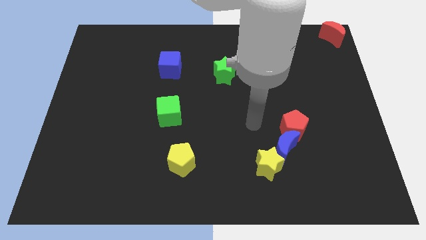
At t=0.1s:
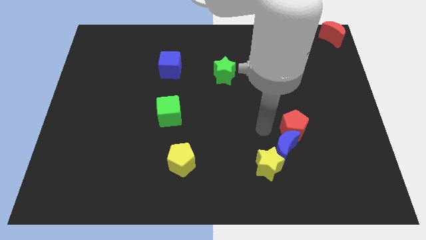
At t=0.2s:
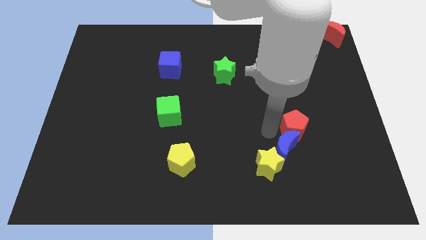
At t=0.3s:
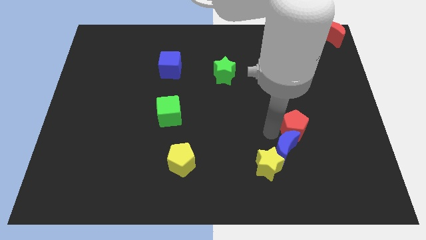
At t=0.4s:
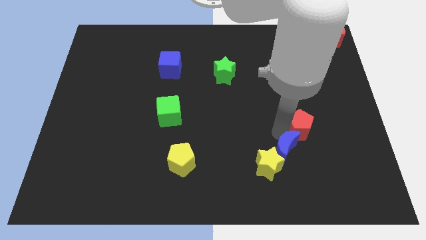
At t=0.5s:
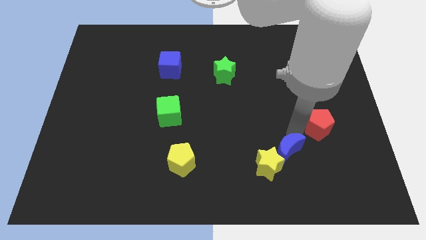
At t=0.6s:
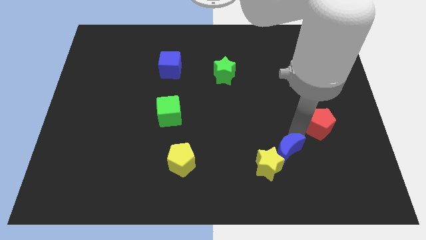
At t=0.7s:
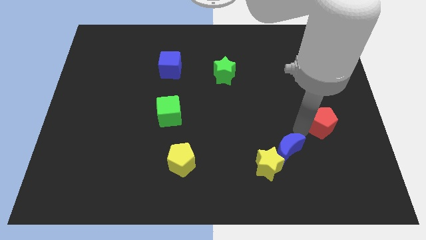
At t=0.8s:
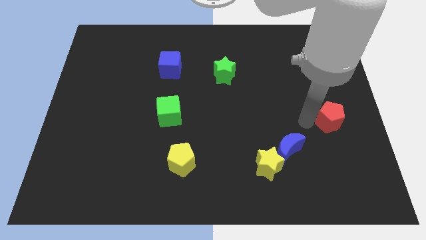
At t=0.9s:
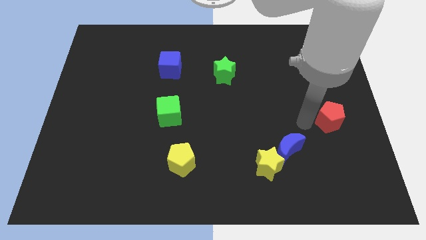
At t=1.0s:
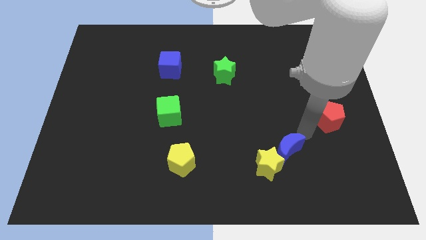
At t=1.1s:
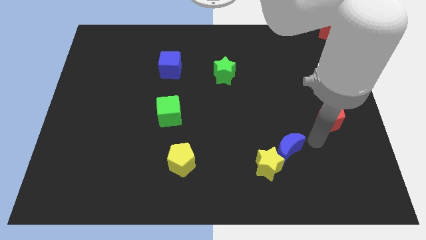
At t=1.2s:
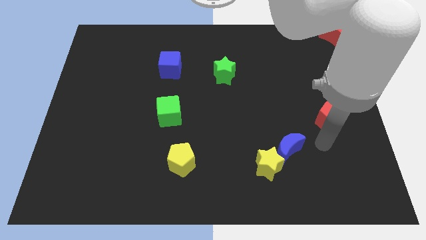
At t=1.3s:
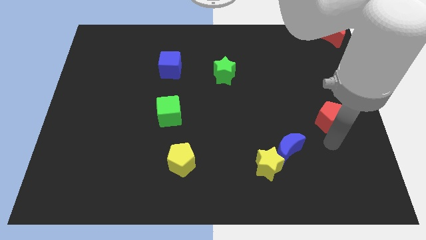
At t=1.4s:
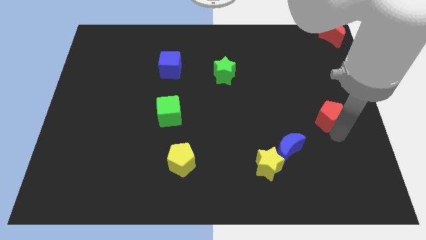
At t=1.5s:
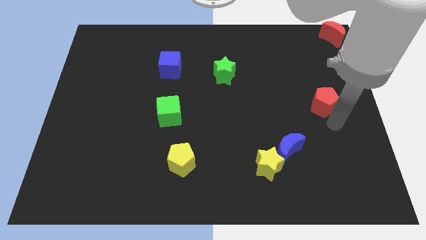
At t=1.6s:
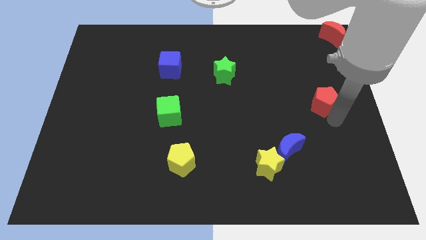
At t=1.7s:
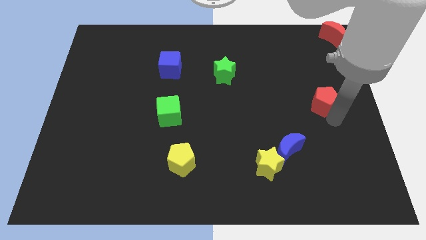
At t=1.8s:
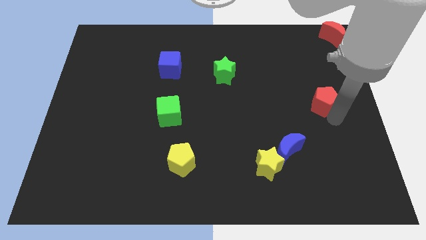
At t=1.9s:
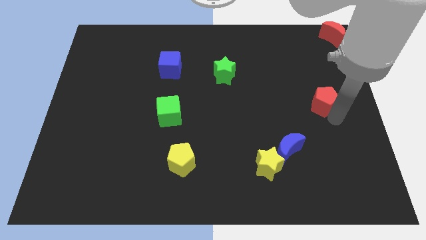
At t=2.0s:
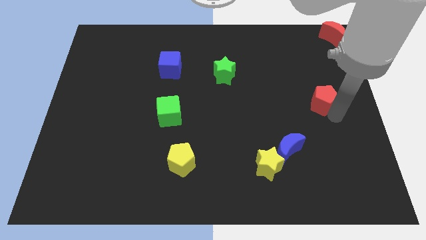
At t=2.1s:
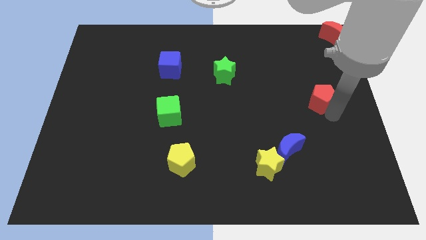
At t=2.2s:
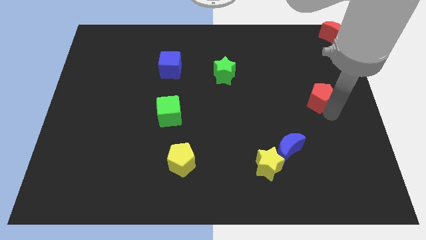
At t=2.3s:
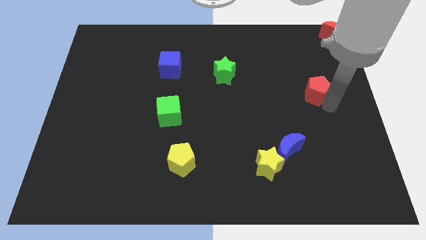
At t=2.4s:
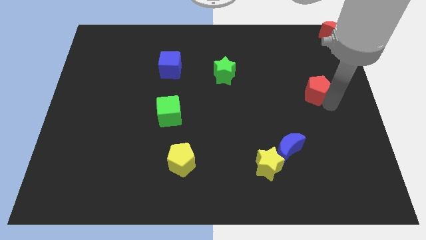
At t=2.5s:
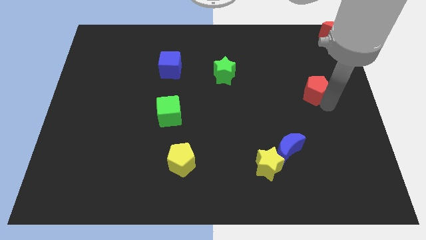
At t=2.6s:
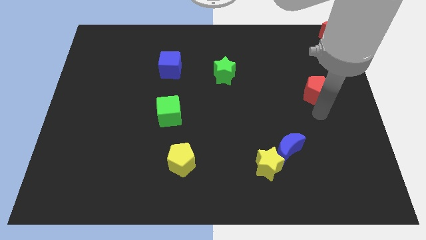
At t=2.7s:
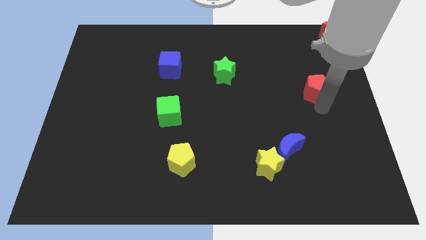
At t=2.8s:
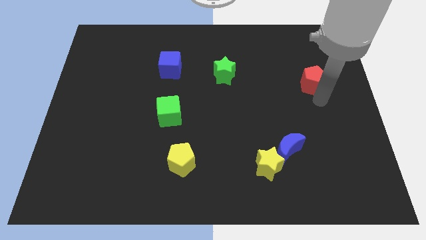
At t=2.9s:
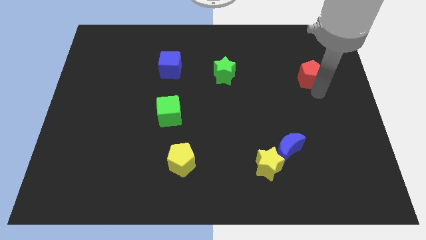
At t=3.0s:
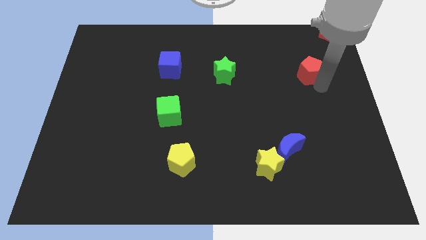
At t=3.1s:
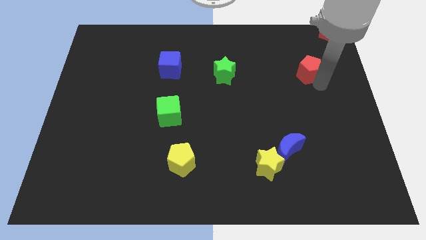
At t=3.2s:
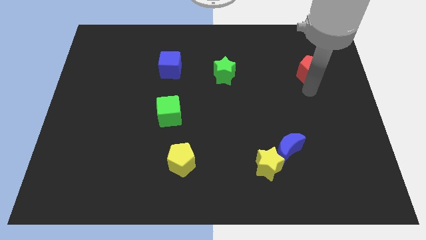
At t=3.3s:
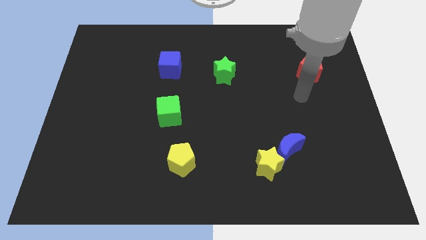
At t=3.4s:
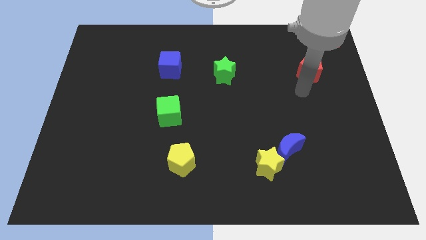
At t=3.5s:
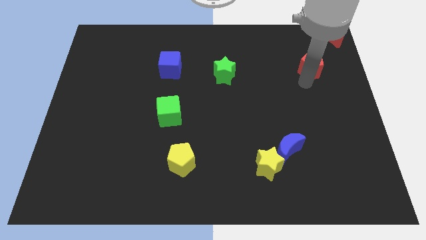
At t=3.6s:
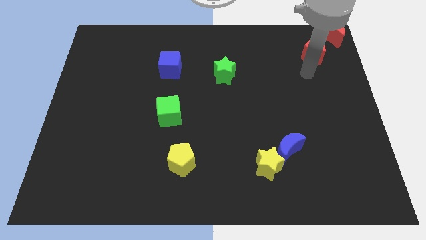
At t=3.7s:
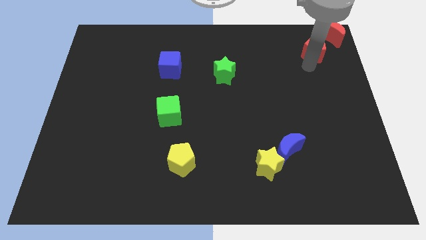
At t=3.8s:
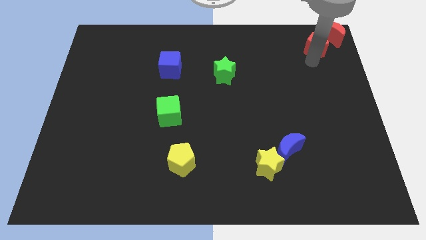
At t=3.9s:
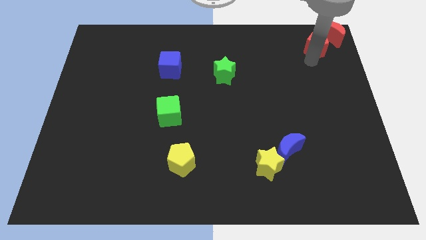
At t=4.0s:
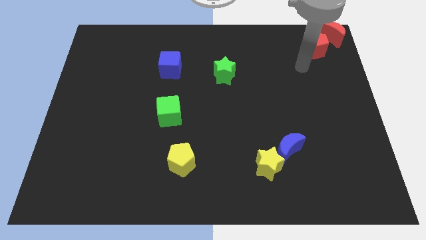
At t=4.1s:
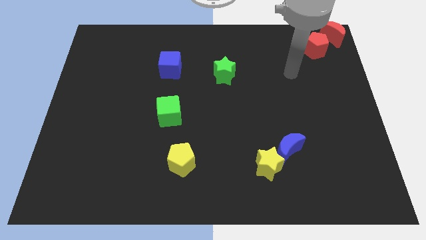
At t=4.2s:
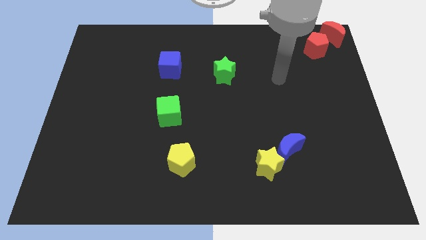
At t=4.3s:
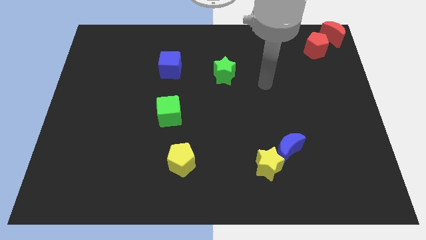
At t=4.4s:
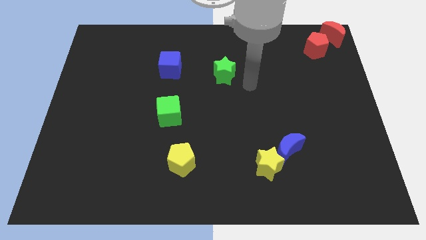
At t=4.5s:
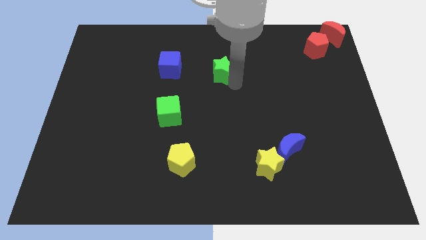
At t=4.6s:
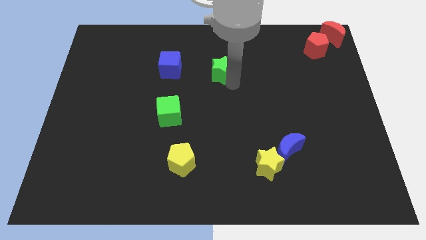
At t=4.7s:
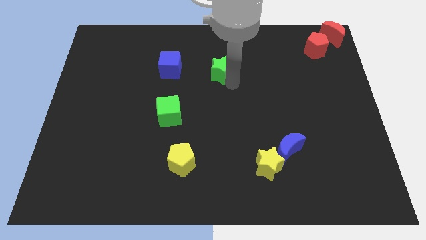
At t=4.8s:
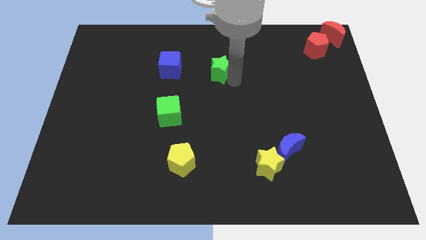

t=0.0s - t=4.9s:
move the red pentagon towards the top right corner

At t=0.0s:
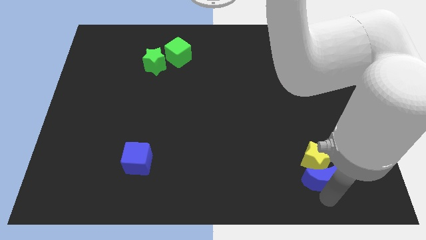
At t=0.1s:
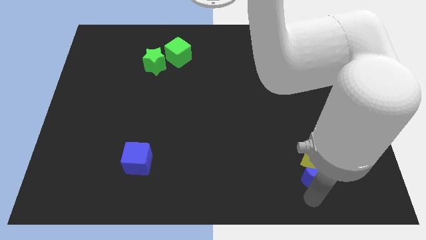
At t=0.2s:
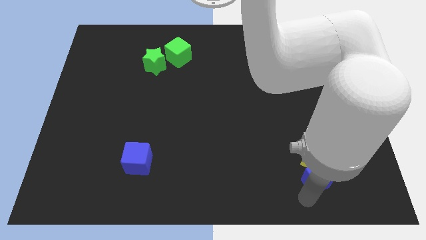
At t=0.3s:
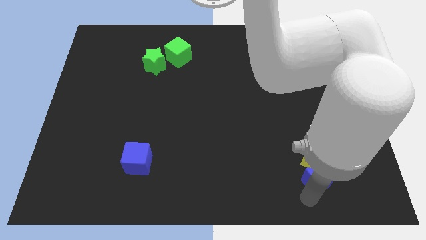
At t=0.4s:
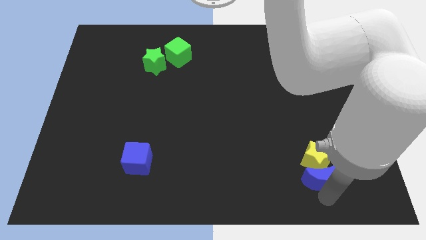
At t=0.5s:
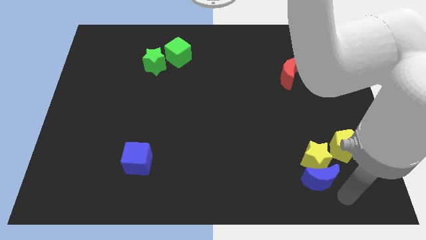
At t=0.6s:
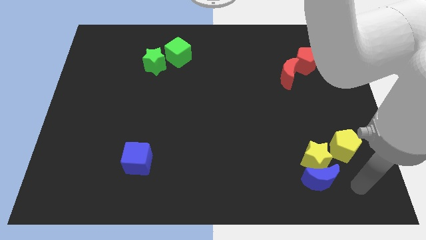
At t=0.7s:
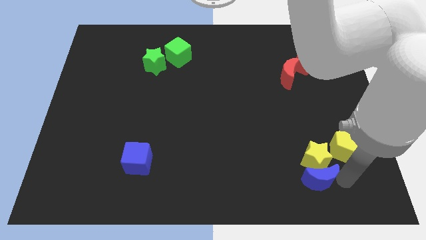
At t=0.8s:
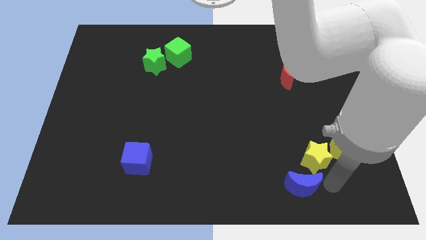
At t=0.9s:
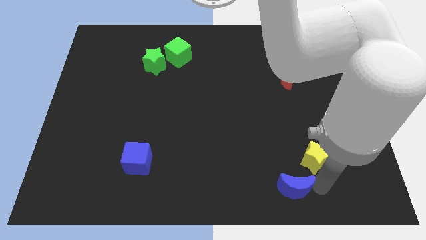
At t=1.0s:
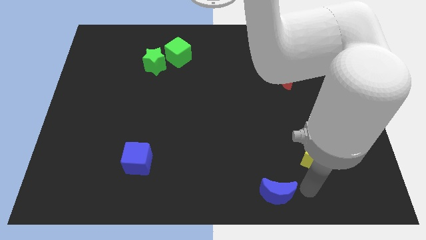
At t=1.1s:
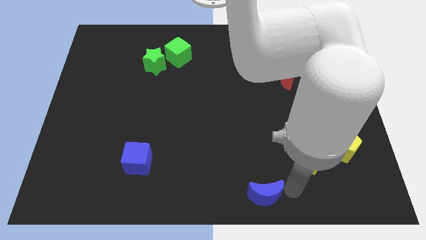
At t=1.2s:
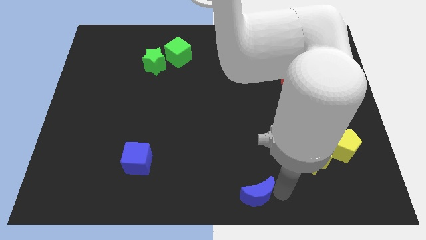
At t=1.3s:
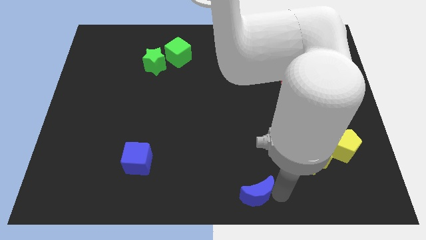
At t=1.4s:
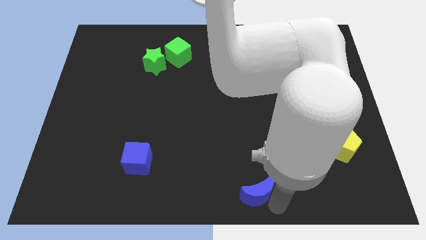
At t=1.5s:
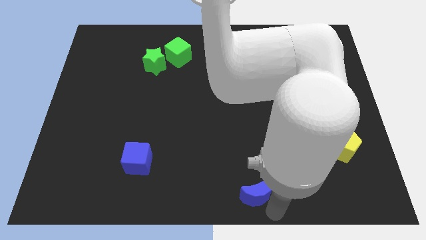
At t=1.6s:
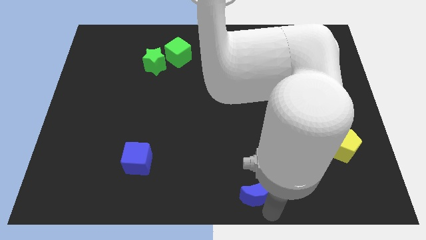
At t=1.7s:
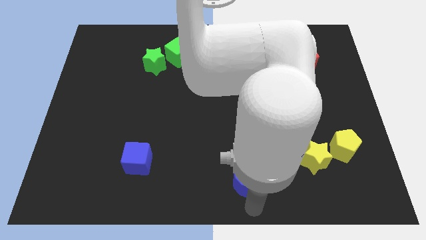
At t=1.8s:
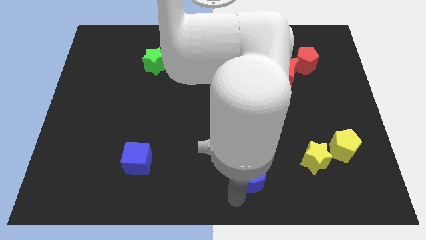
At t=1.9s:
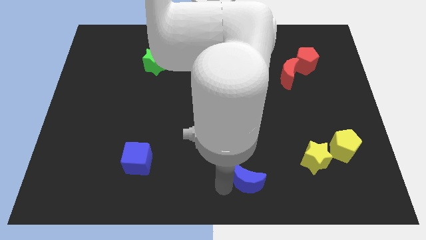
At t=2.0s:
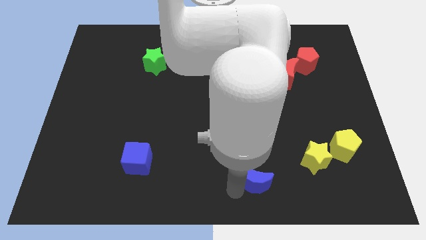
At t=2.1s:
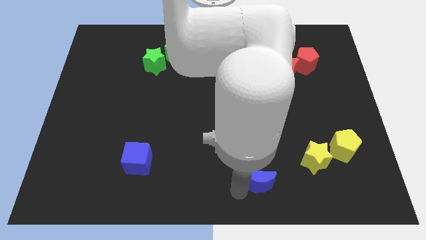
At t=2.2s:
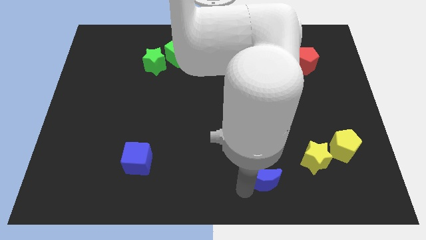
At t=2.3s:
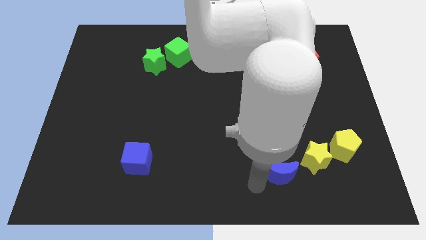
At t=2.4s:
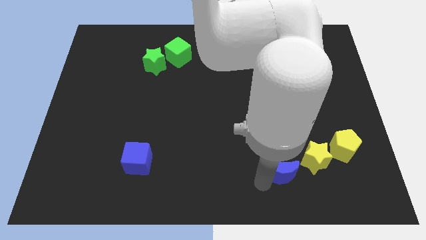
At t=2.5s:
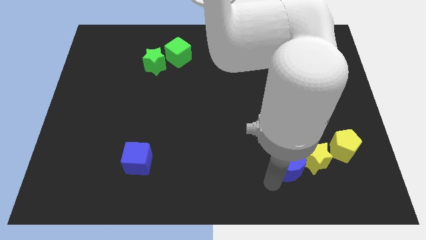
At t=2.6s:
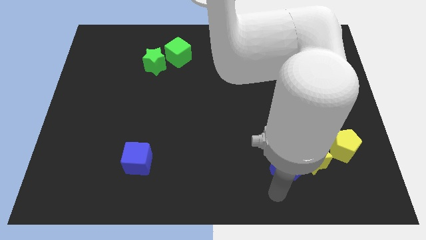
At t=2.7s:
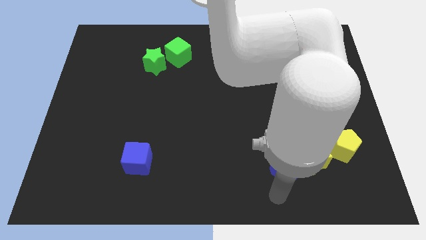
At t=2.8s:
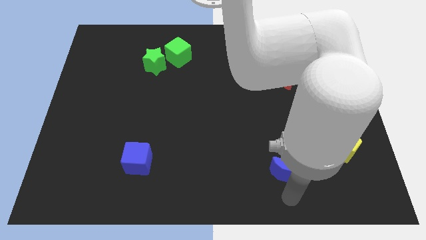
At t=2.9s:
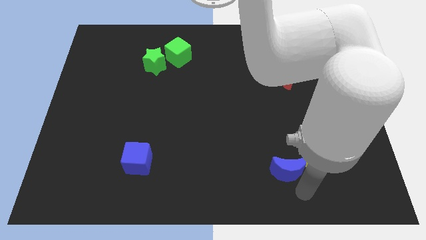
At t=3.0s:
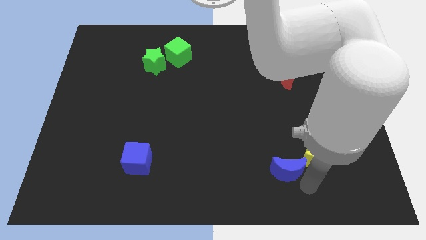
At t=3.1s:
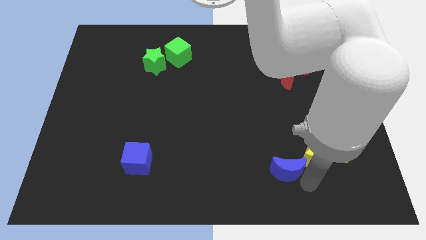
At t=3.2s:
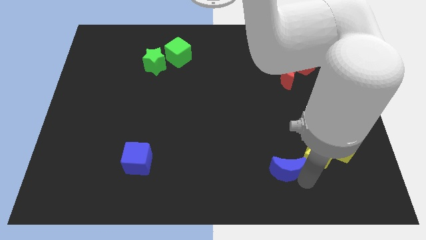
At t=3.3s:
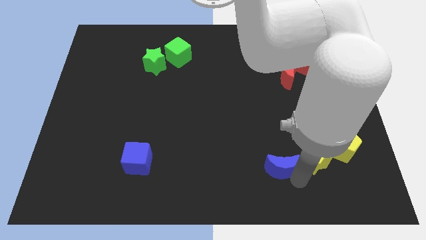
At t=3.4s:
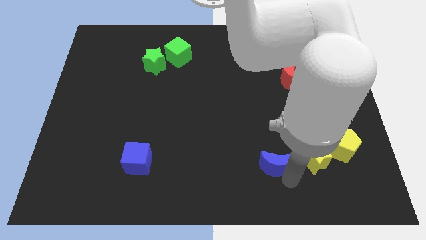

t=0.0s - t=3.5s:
push the blue crescent to the left of the yellow star

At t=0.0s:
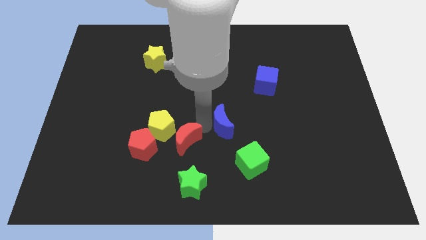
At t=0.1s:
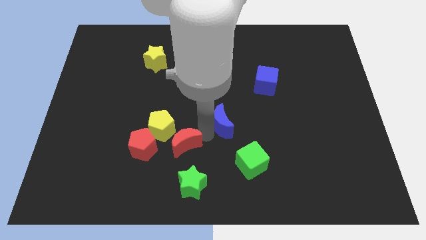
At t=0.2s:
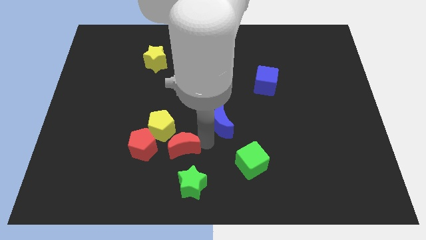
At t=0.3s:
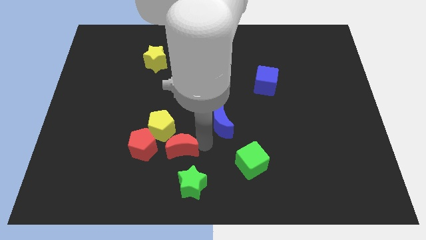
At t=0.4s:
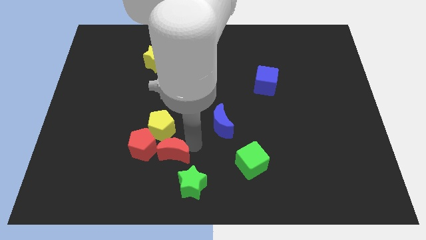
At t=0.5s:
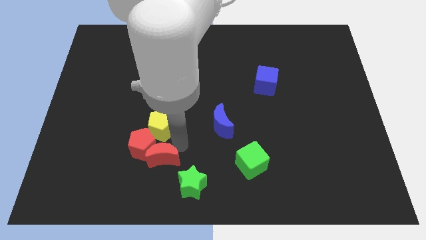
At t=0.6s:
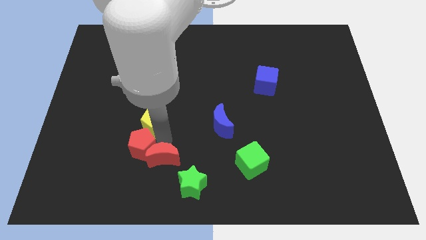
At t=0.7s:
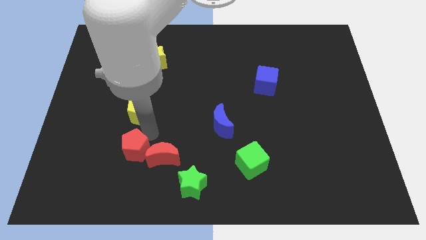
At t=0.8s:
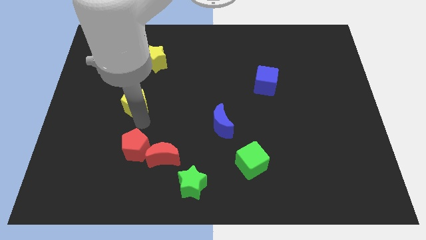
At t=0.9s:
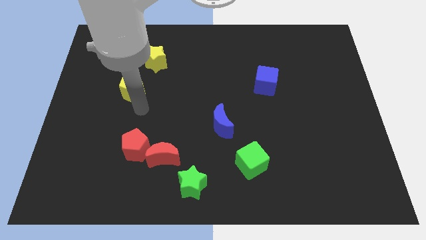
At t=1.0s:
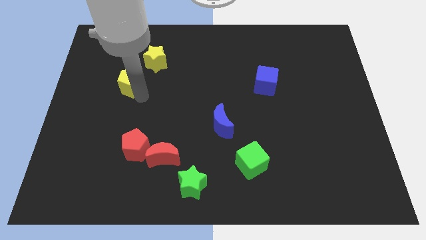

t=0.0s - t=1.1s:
separate yellow pentagon from the red blocks
